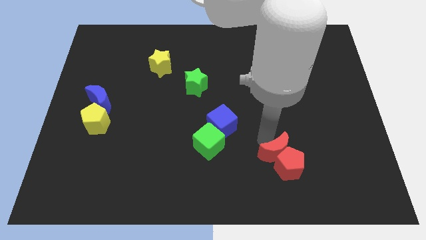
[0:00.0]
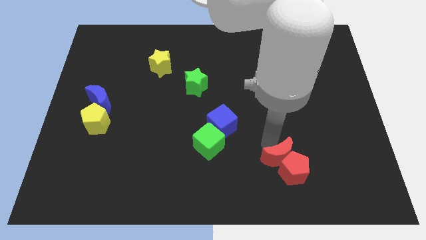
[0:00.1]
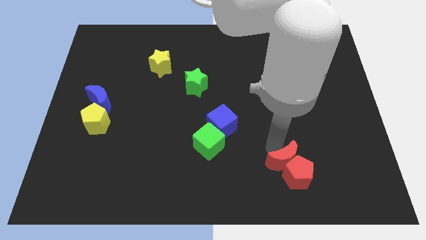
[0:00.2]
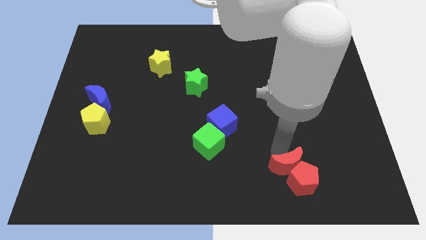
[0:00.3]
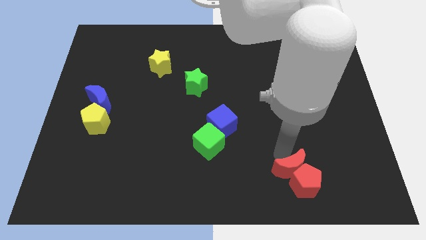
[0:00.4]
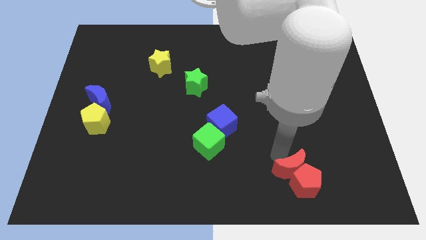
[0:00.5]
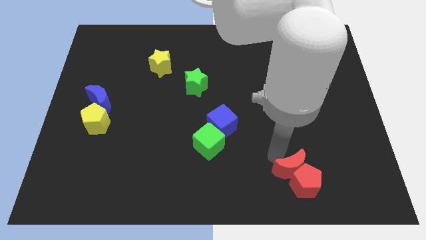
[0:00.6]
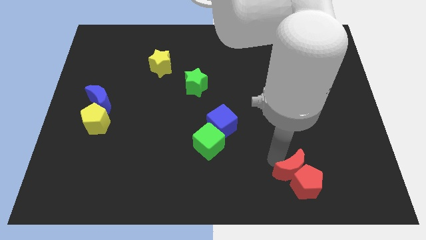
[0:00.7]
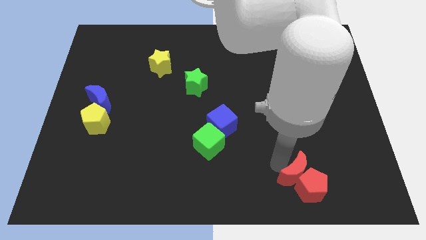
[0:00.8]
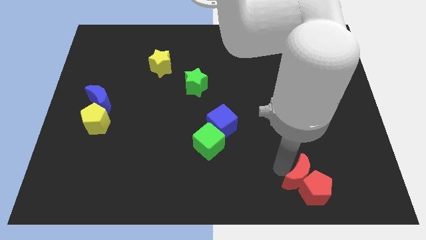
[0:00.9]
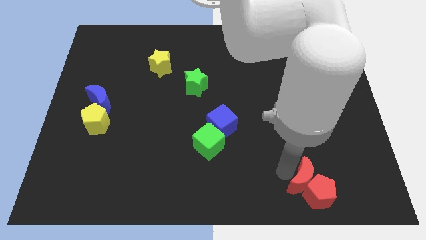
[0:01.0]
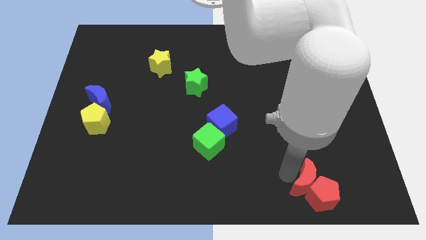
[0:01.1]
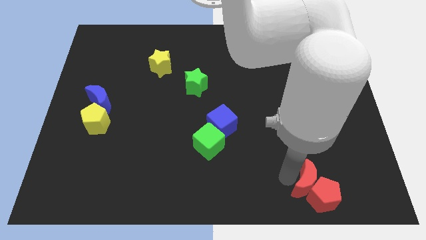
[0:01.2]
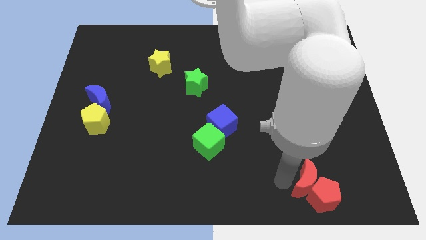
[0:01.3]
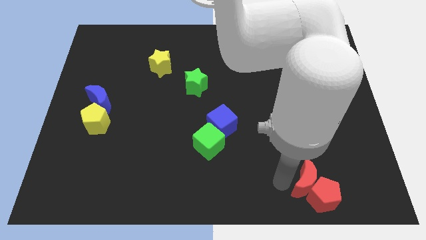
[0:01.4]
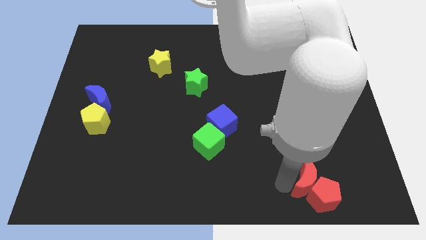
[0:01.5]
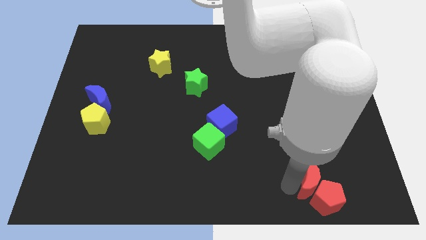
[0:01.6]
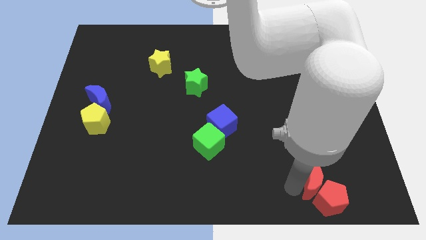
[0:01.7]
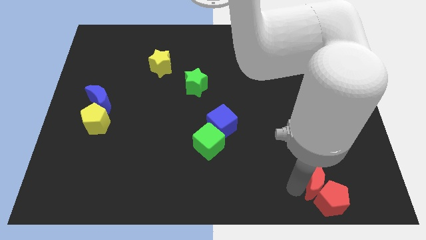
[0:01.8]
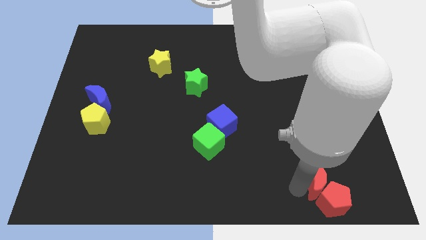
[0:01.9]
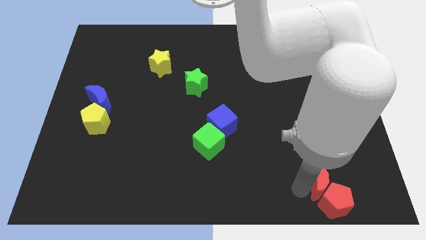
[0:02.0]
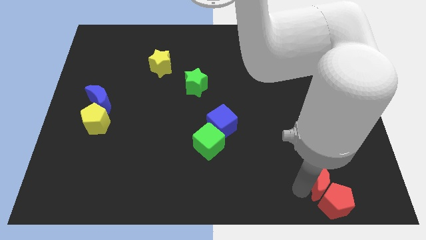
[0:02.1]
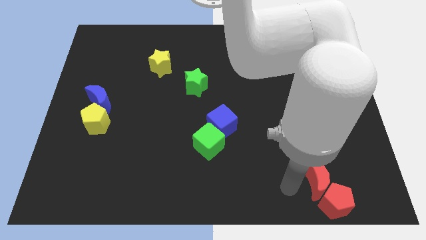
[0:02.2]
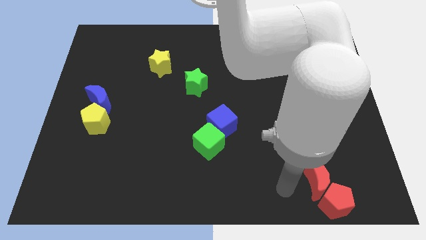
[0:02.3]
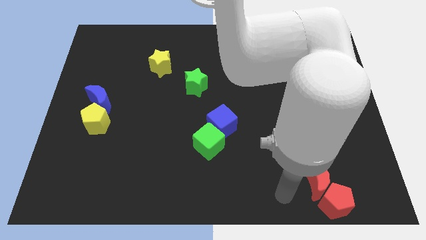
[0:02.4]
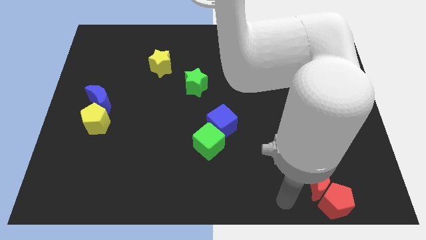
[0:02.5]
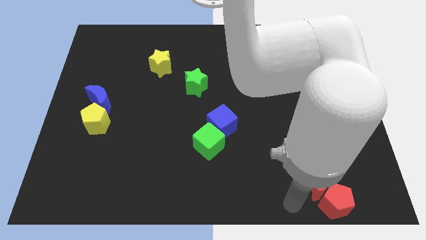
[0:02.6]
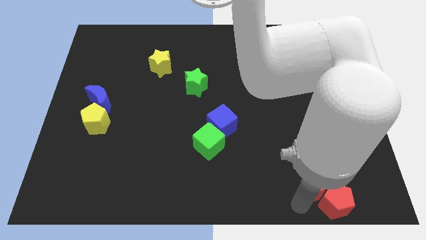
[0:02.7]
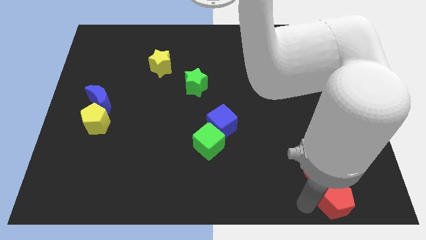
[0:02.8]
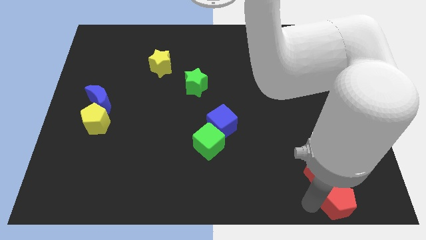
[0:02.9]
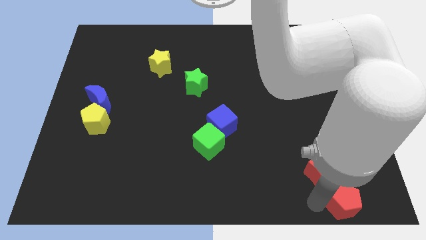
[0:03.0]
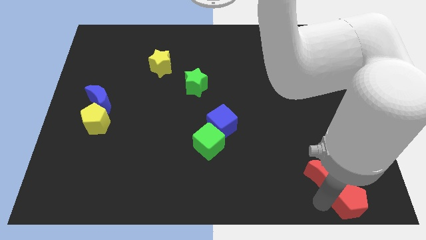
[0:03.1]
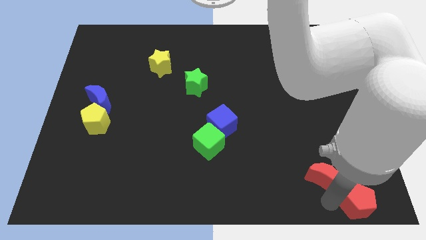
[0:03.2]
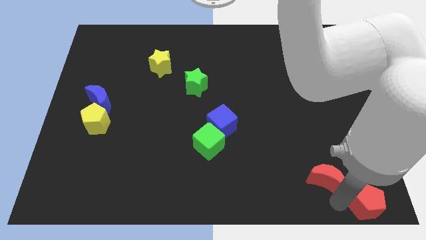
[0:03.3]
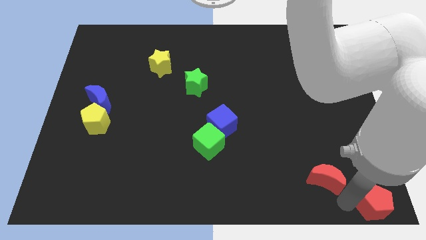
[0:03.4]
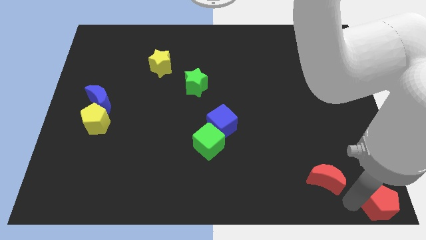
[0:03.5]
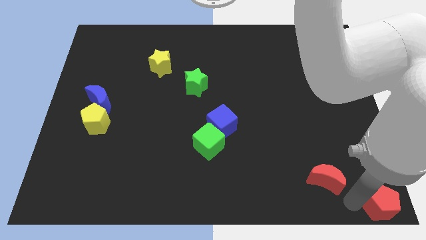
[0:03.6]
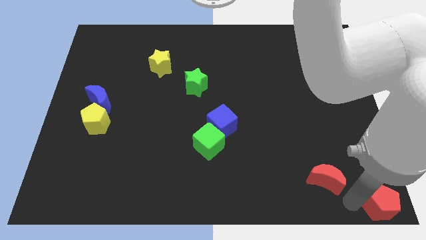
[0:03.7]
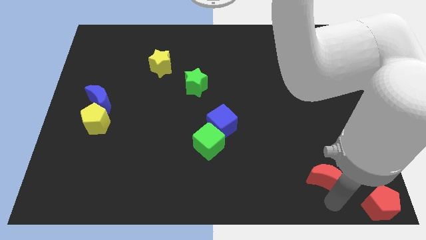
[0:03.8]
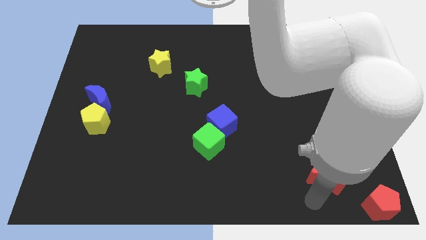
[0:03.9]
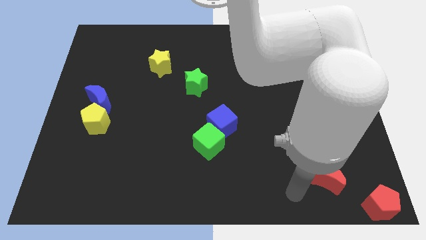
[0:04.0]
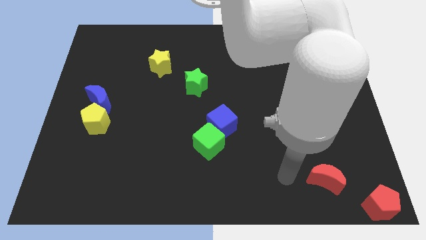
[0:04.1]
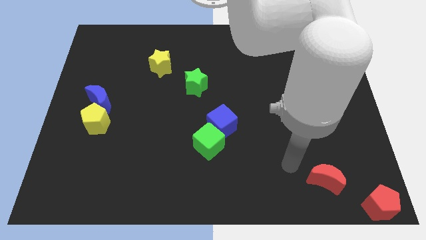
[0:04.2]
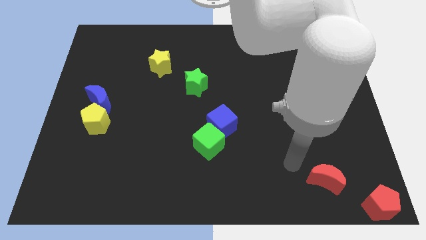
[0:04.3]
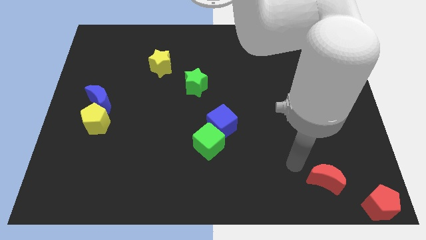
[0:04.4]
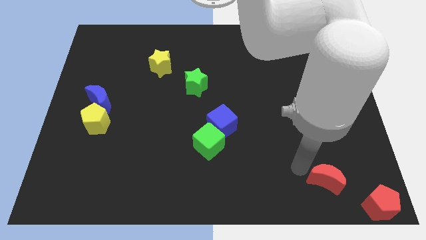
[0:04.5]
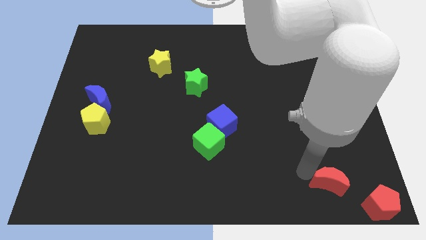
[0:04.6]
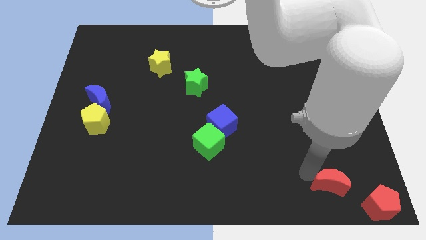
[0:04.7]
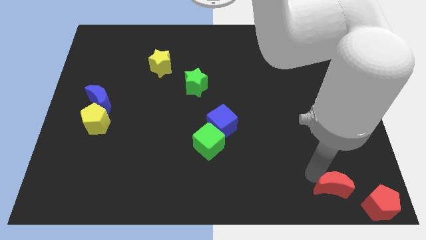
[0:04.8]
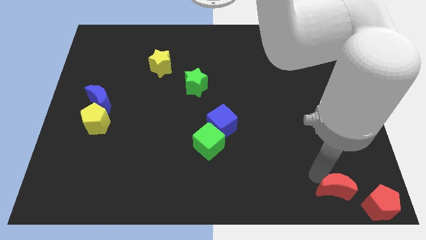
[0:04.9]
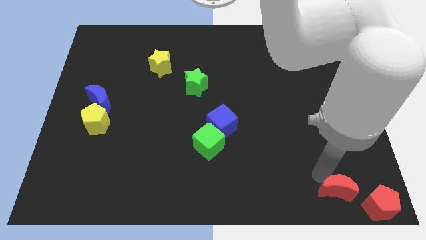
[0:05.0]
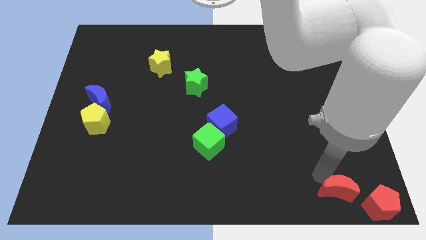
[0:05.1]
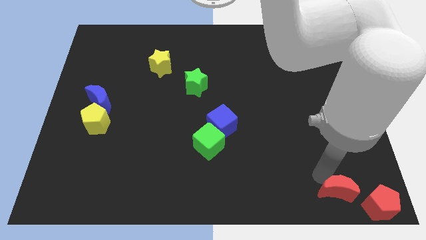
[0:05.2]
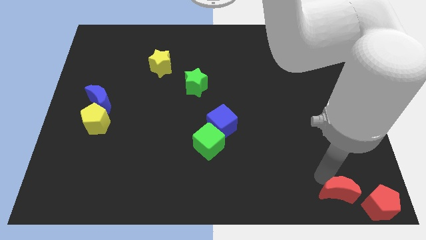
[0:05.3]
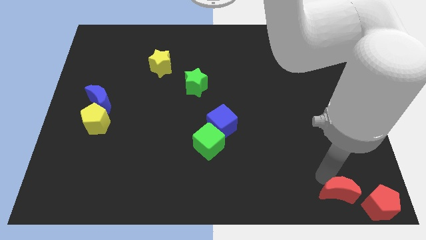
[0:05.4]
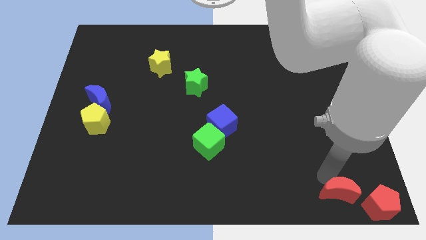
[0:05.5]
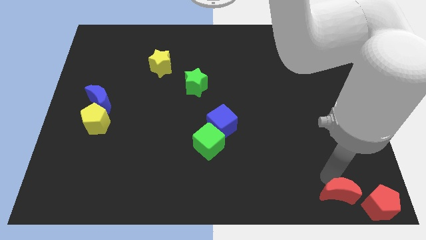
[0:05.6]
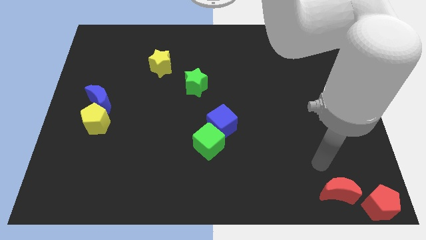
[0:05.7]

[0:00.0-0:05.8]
move the red crescent and pentagon to the bottom right of the table

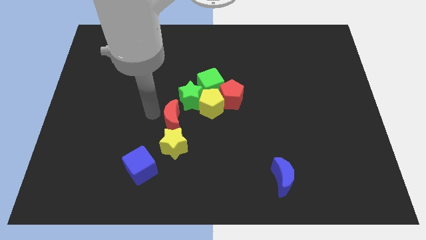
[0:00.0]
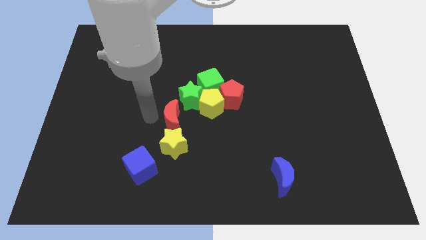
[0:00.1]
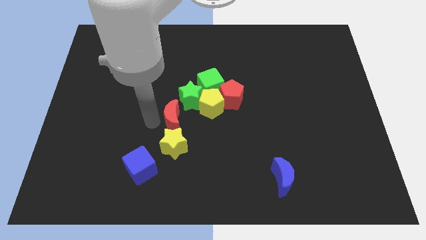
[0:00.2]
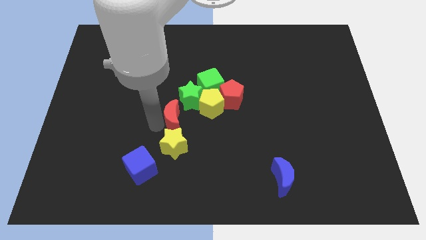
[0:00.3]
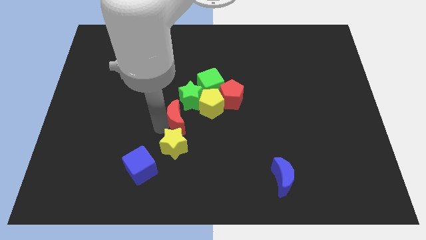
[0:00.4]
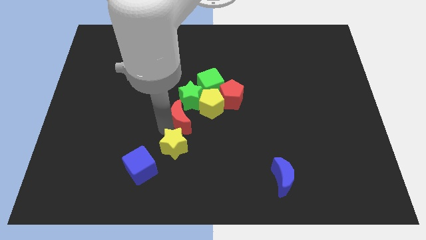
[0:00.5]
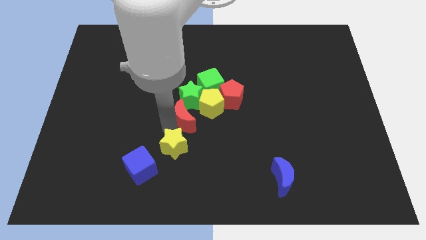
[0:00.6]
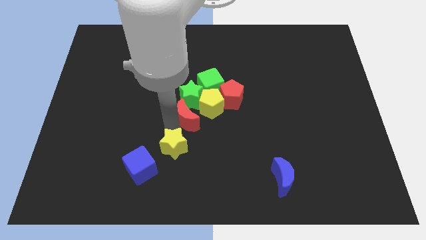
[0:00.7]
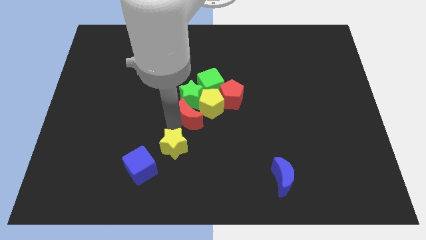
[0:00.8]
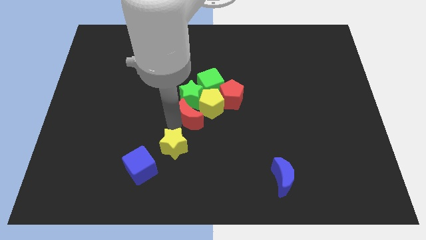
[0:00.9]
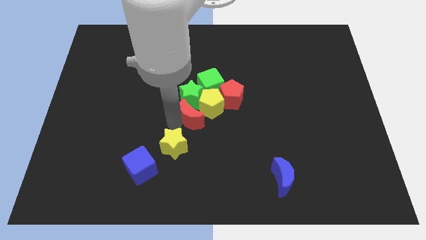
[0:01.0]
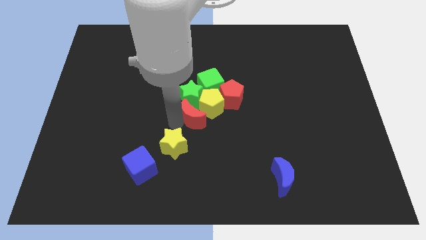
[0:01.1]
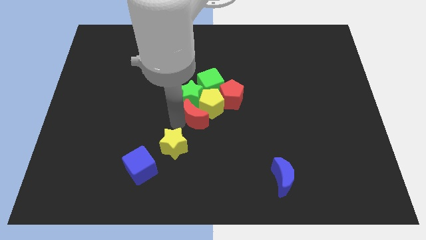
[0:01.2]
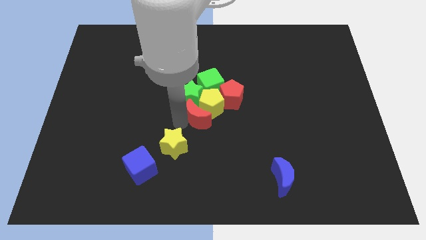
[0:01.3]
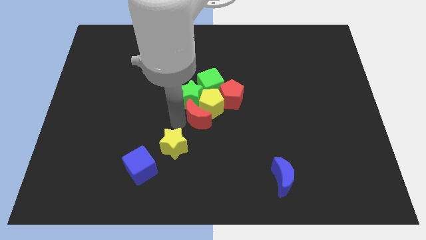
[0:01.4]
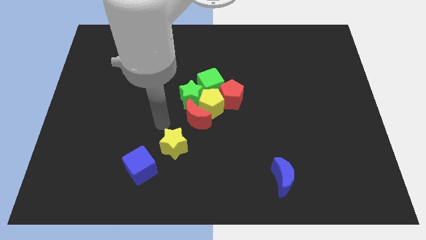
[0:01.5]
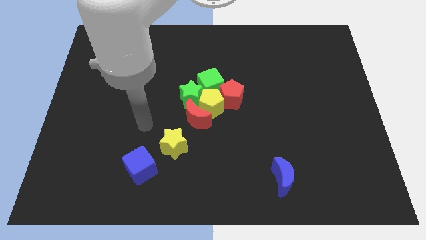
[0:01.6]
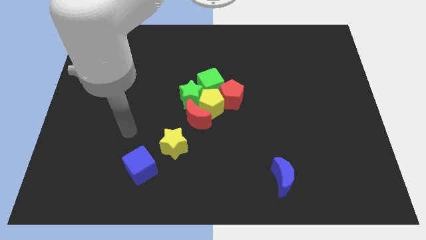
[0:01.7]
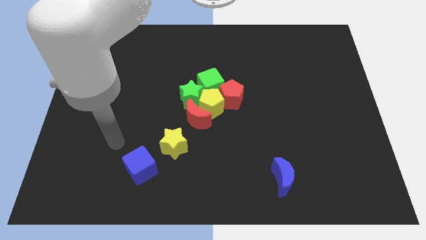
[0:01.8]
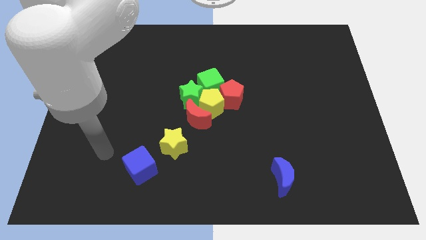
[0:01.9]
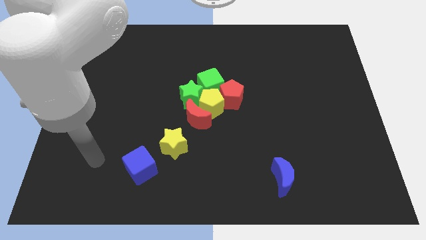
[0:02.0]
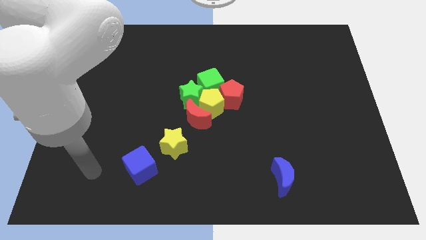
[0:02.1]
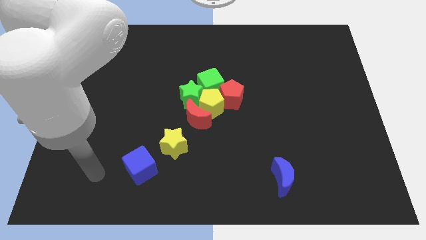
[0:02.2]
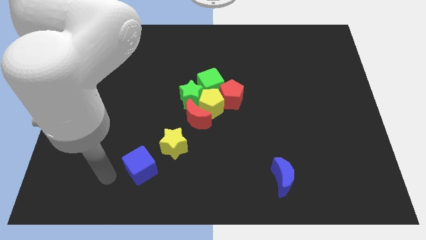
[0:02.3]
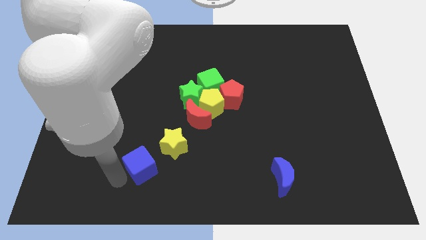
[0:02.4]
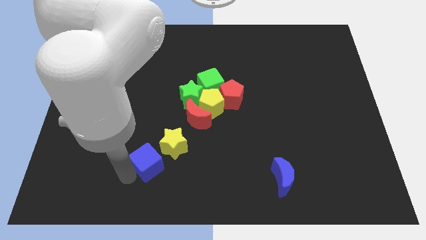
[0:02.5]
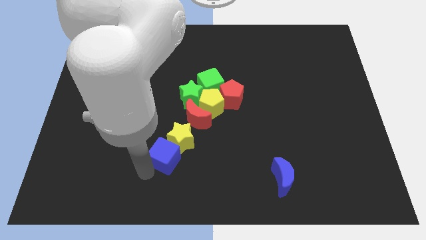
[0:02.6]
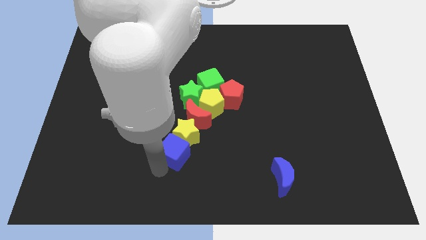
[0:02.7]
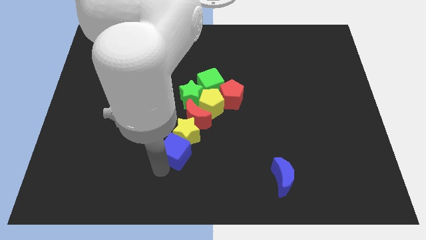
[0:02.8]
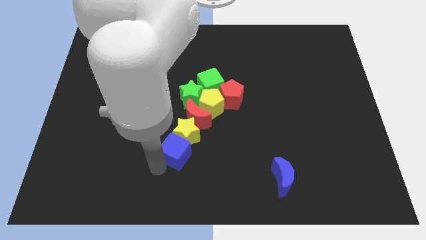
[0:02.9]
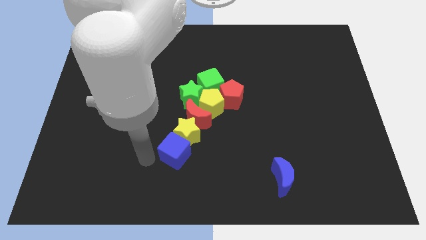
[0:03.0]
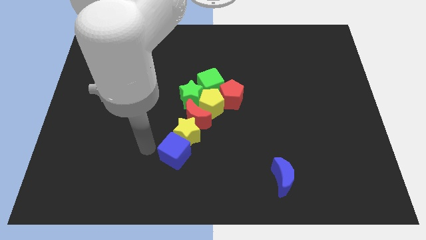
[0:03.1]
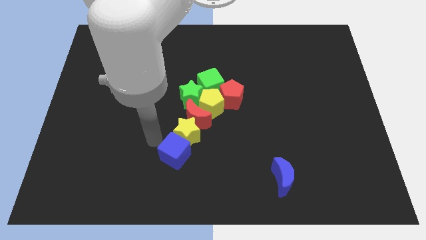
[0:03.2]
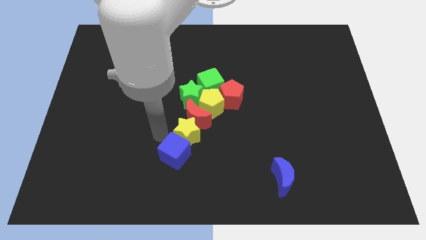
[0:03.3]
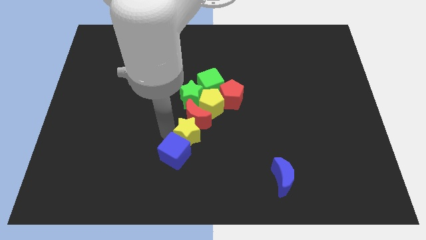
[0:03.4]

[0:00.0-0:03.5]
push the yellow star with the blue cube towards the center of the board
